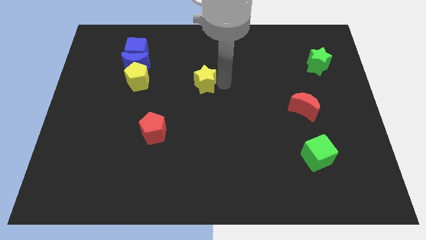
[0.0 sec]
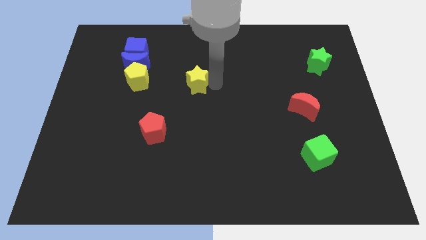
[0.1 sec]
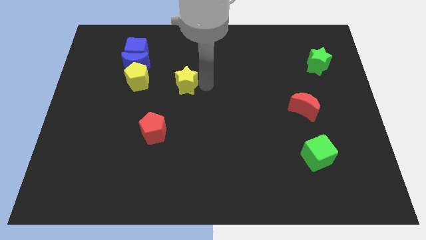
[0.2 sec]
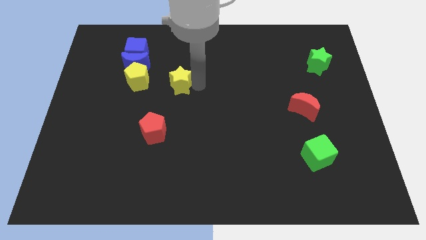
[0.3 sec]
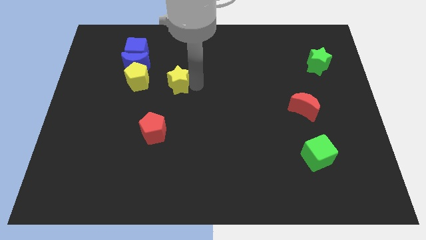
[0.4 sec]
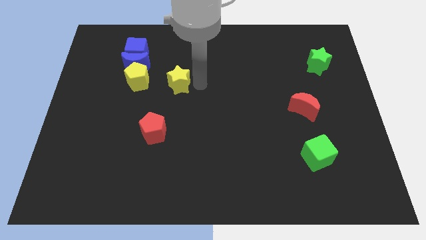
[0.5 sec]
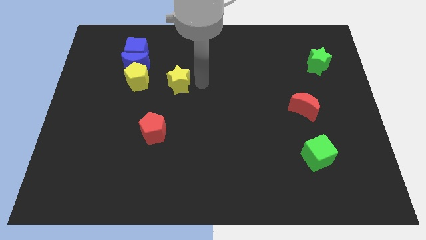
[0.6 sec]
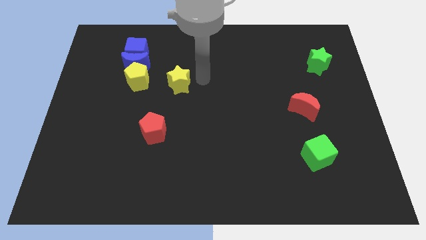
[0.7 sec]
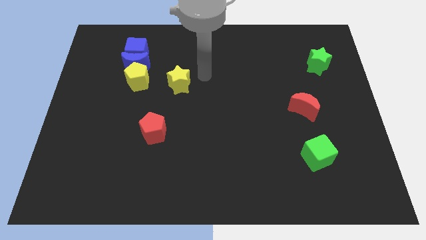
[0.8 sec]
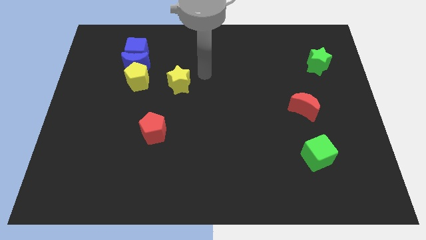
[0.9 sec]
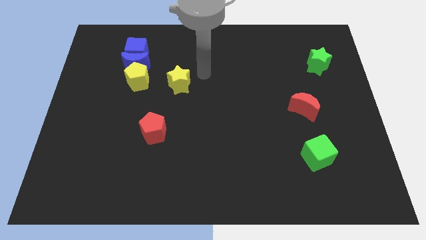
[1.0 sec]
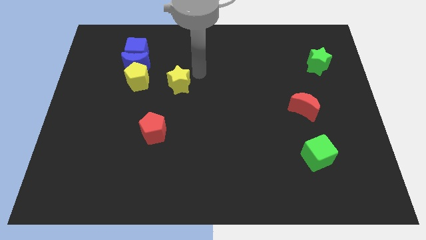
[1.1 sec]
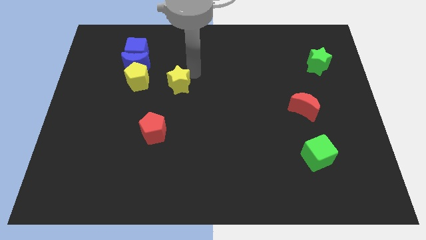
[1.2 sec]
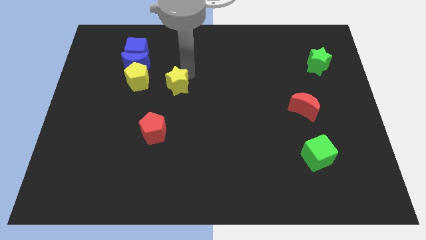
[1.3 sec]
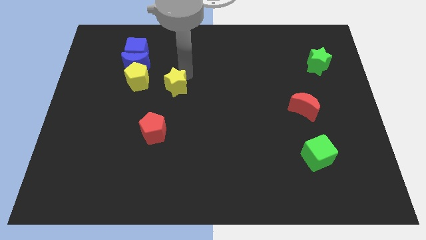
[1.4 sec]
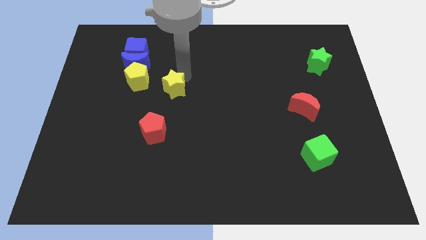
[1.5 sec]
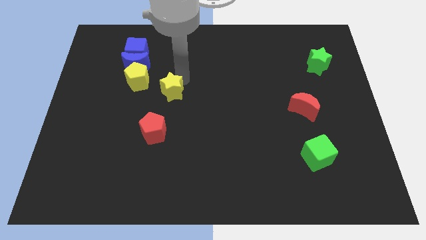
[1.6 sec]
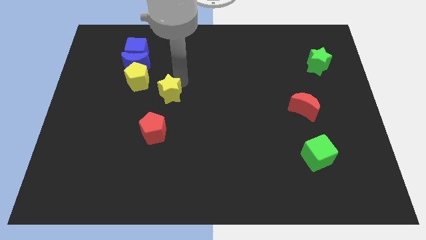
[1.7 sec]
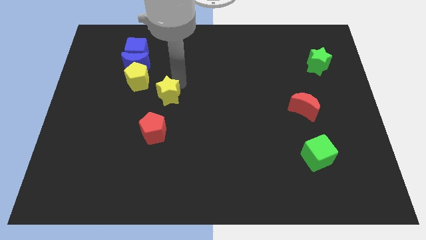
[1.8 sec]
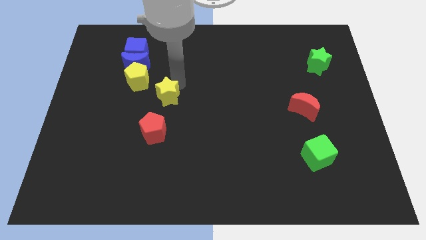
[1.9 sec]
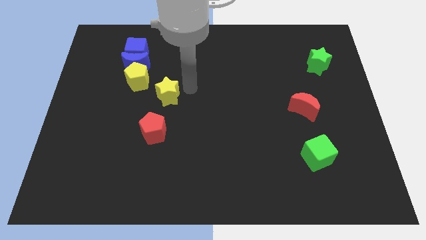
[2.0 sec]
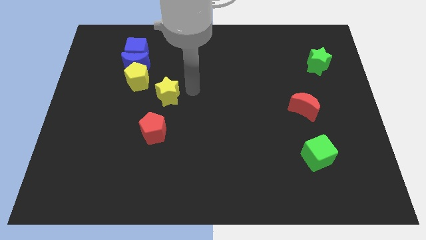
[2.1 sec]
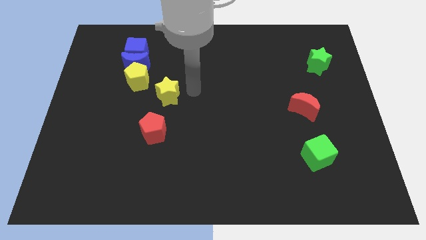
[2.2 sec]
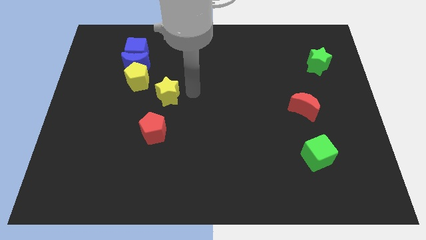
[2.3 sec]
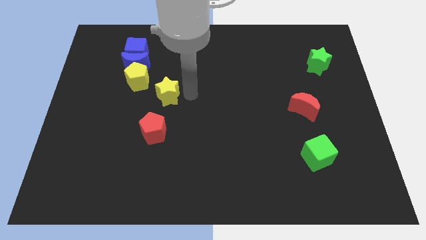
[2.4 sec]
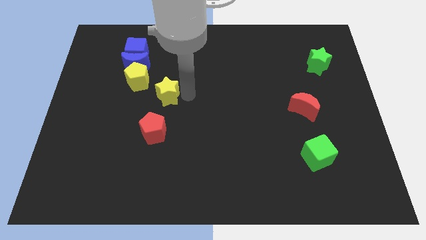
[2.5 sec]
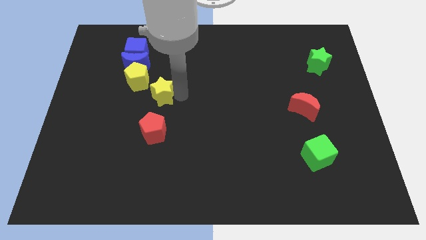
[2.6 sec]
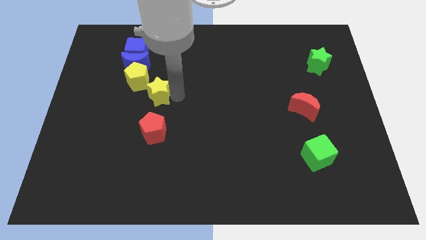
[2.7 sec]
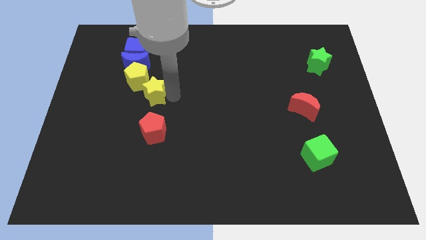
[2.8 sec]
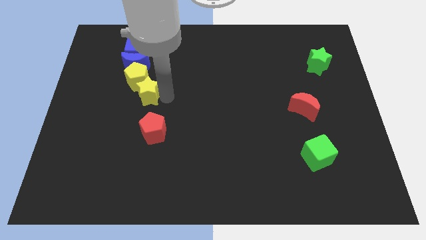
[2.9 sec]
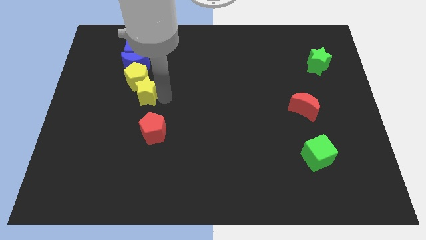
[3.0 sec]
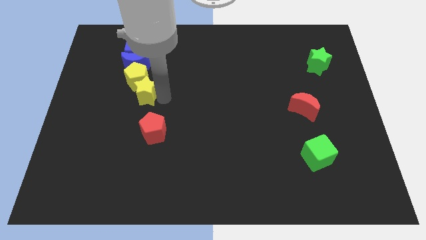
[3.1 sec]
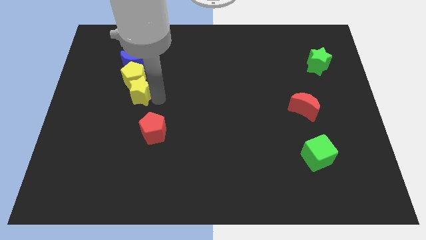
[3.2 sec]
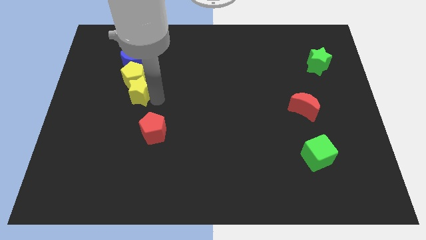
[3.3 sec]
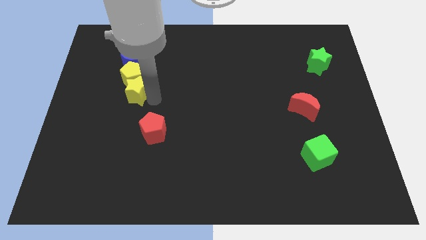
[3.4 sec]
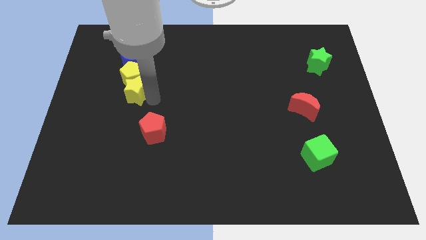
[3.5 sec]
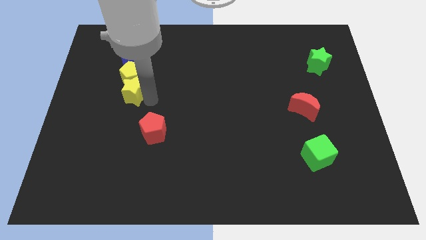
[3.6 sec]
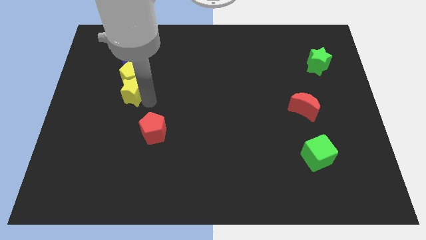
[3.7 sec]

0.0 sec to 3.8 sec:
push the yellow star below the yellow pentagon

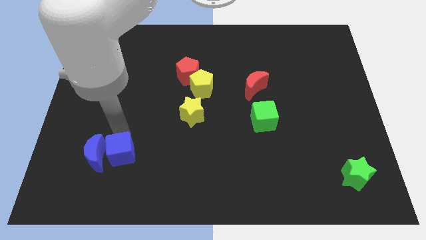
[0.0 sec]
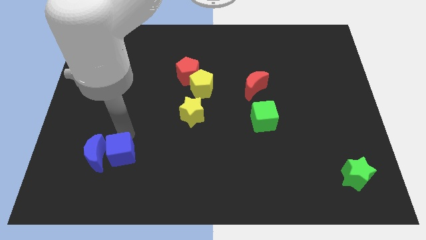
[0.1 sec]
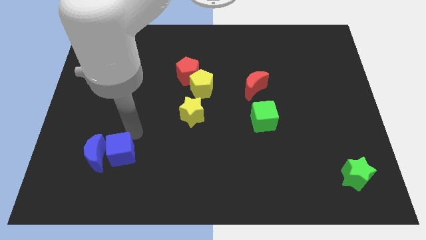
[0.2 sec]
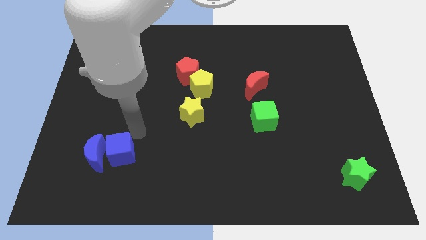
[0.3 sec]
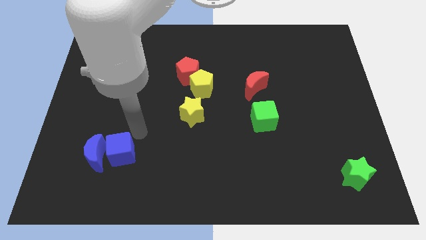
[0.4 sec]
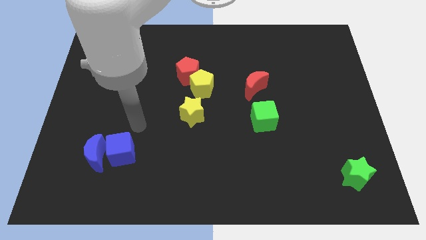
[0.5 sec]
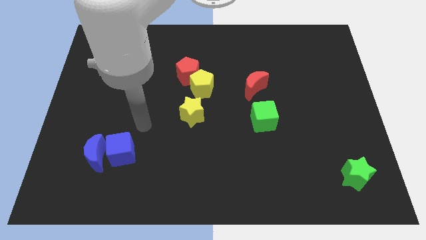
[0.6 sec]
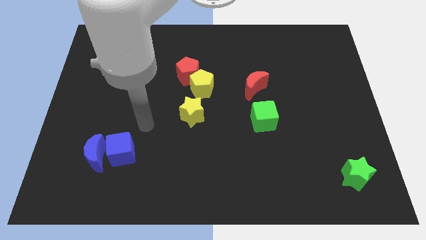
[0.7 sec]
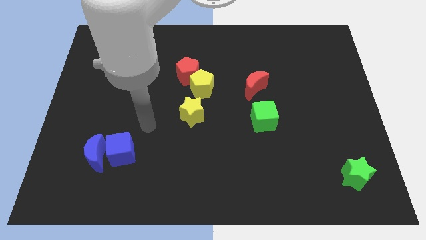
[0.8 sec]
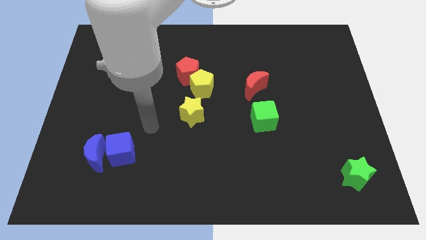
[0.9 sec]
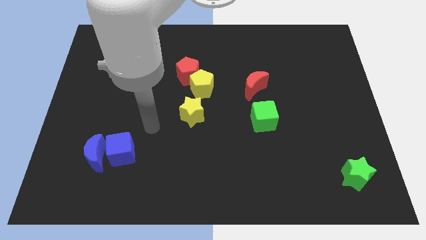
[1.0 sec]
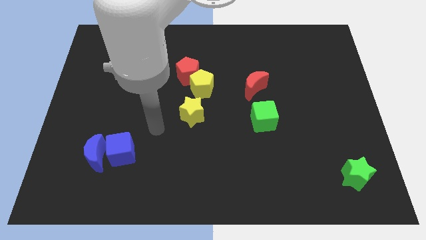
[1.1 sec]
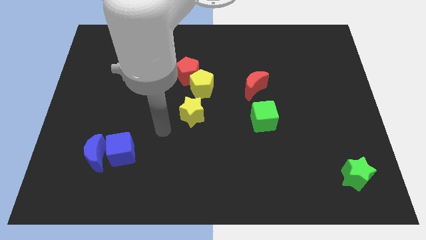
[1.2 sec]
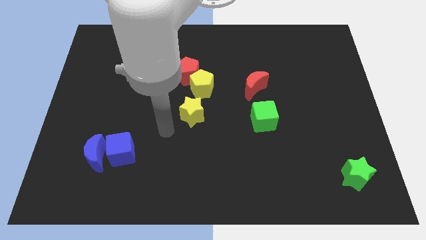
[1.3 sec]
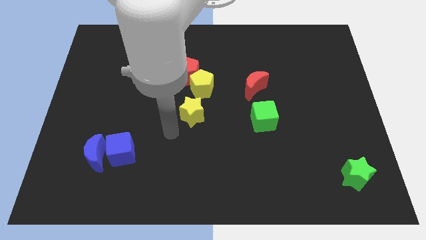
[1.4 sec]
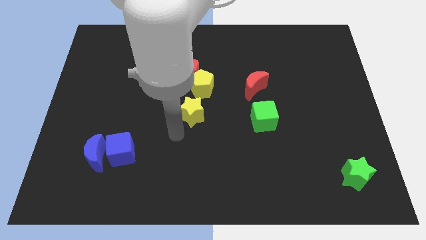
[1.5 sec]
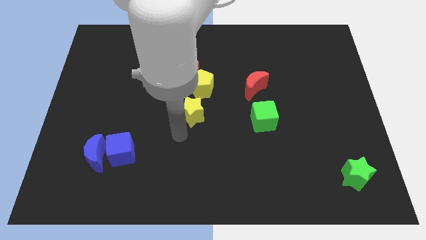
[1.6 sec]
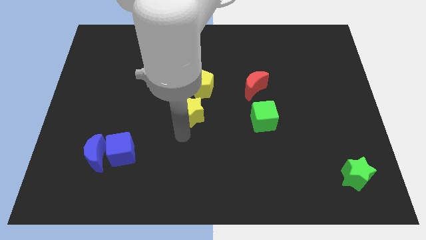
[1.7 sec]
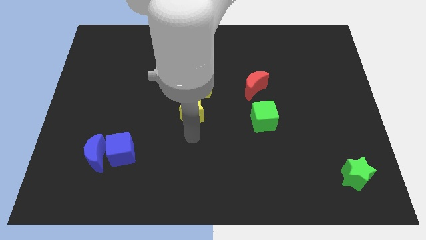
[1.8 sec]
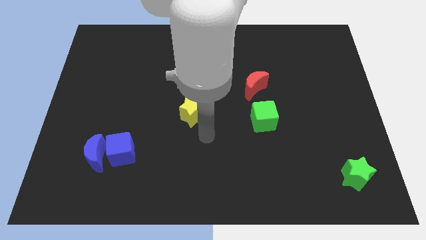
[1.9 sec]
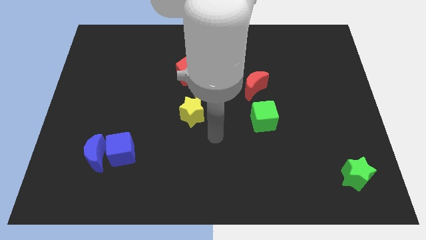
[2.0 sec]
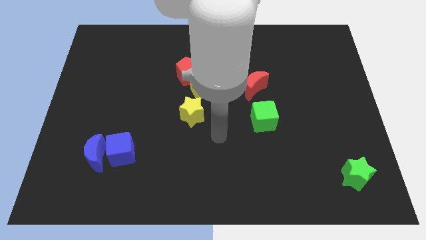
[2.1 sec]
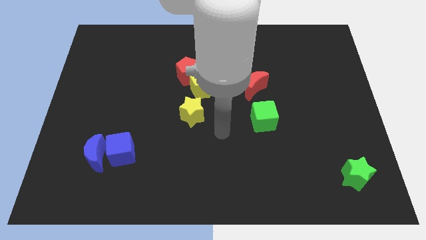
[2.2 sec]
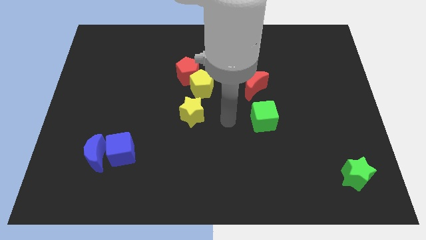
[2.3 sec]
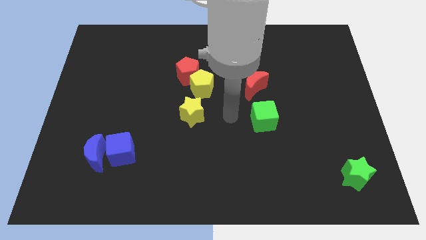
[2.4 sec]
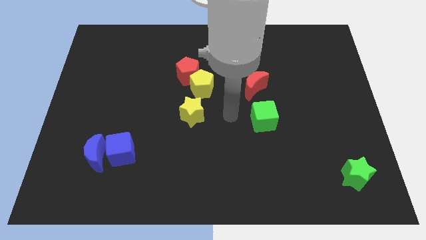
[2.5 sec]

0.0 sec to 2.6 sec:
move the arm left to the green cube

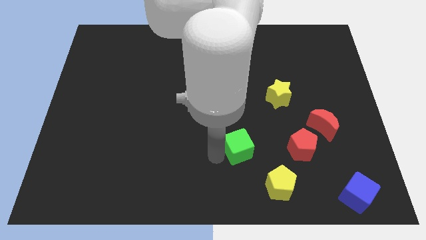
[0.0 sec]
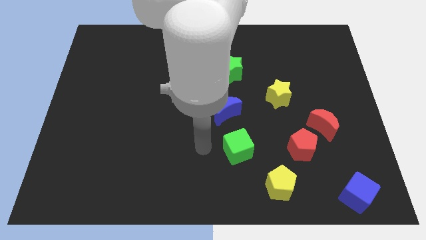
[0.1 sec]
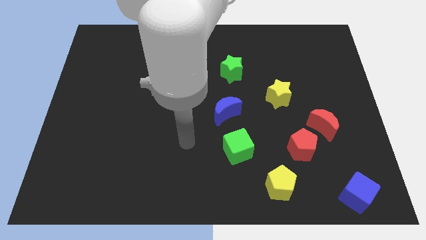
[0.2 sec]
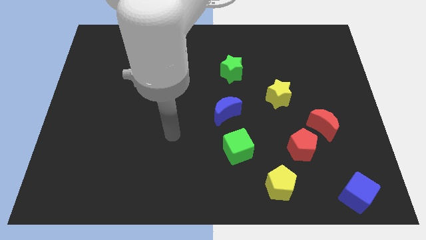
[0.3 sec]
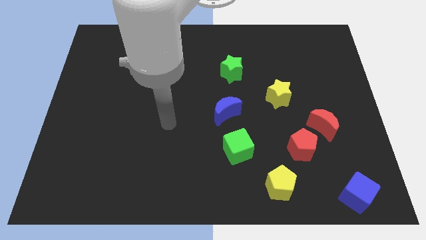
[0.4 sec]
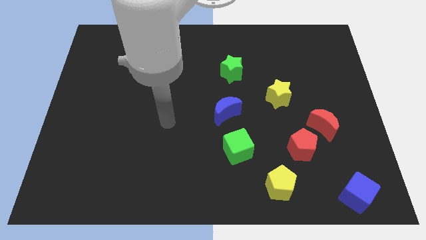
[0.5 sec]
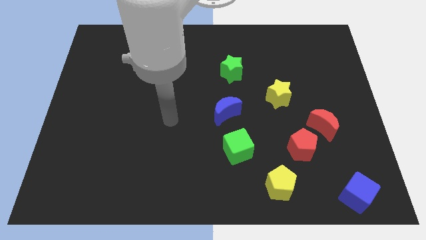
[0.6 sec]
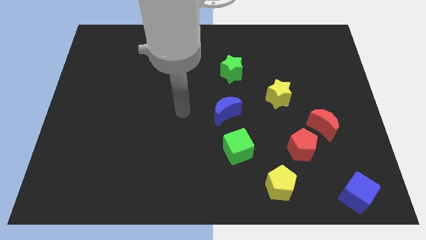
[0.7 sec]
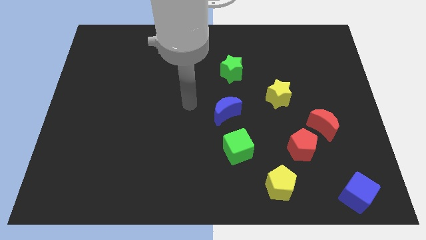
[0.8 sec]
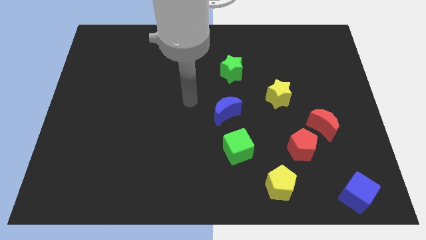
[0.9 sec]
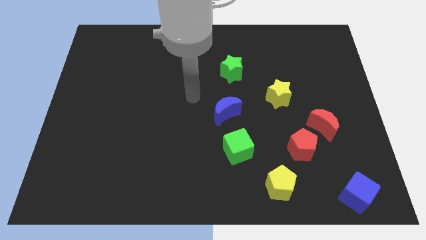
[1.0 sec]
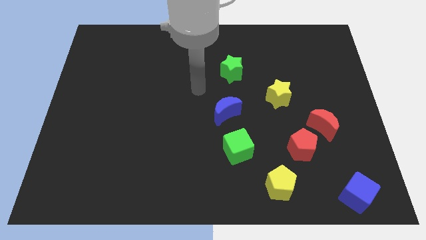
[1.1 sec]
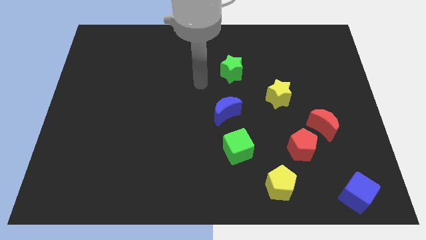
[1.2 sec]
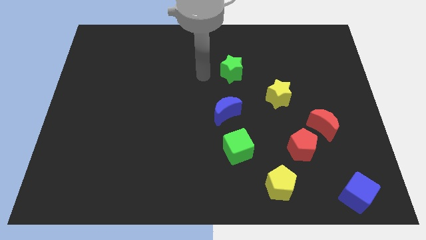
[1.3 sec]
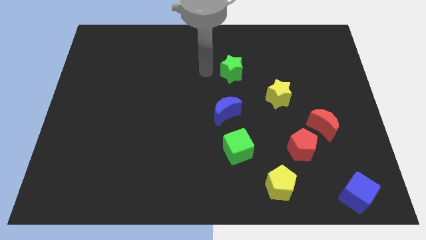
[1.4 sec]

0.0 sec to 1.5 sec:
move your arm away from the green cube

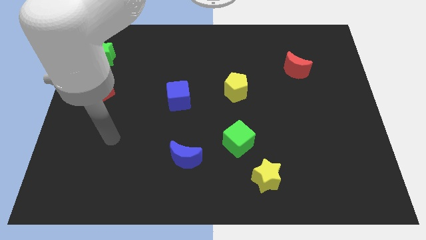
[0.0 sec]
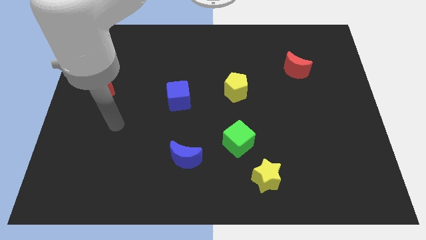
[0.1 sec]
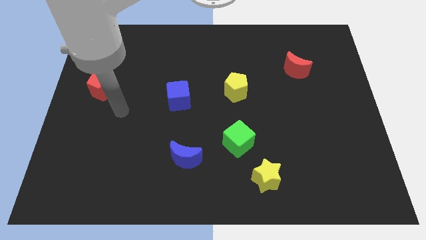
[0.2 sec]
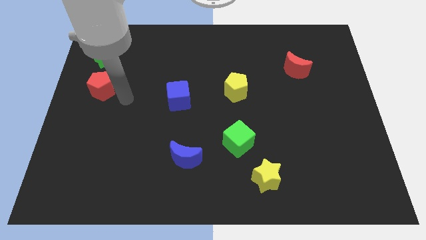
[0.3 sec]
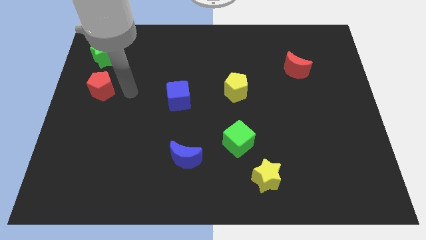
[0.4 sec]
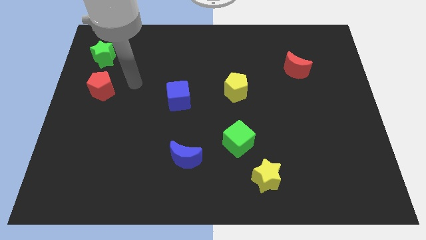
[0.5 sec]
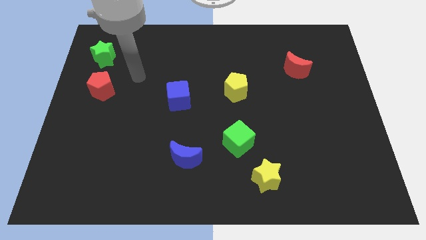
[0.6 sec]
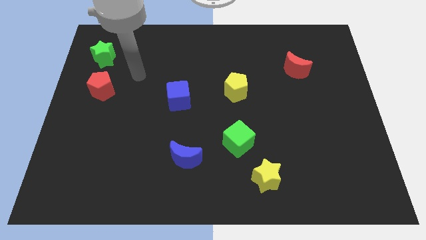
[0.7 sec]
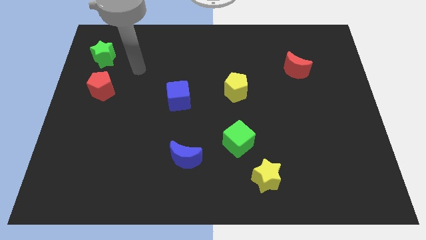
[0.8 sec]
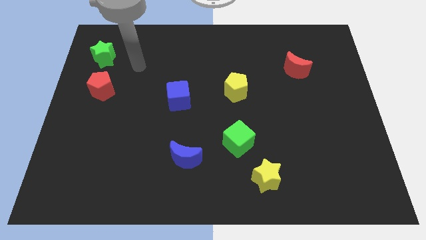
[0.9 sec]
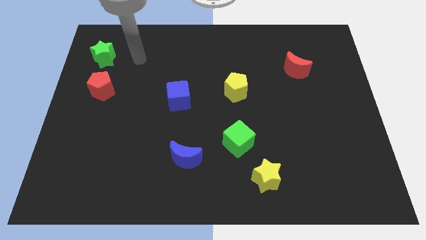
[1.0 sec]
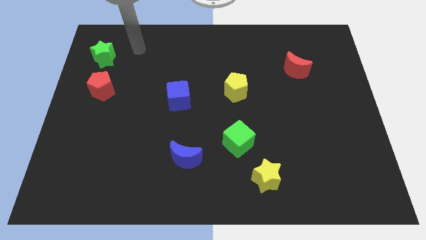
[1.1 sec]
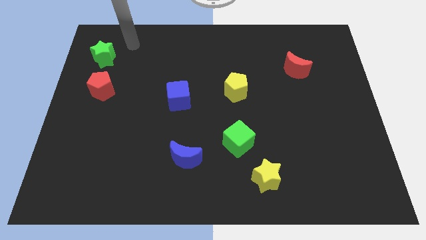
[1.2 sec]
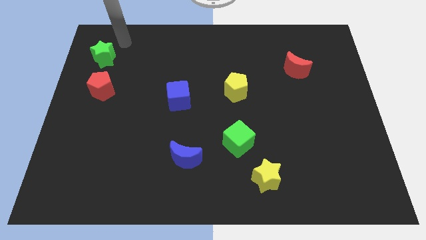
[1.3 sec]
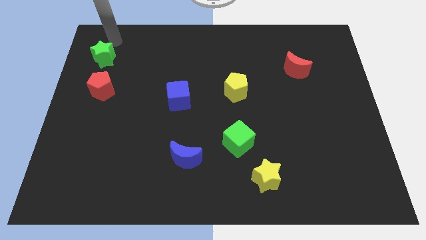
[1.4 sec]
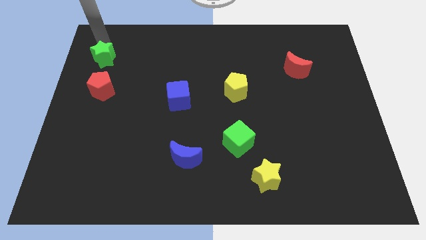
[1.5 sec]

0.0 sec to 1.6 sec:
move your arm to the top of green star
